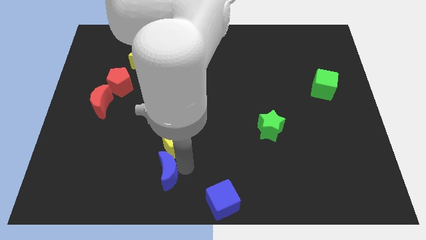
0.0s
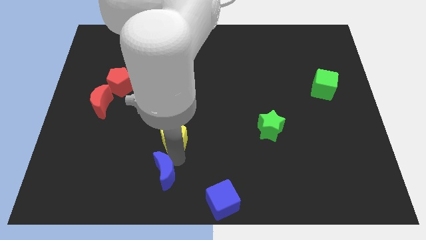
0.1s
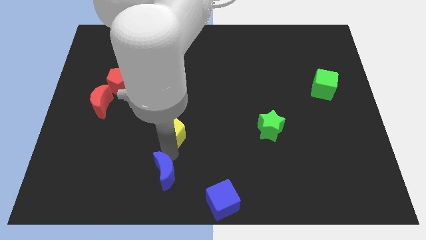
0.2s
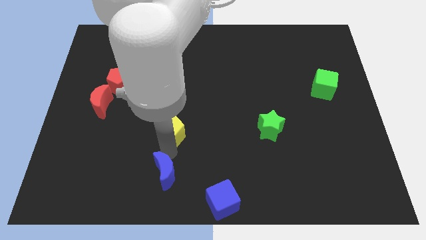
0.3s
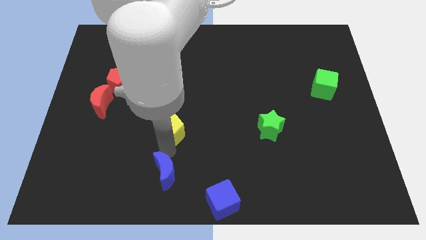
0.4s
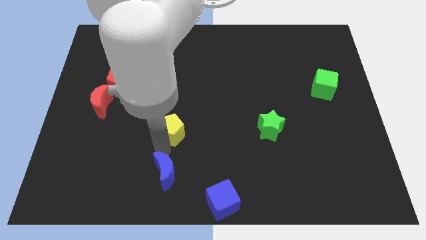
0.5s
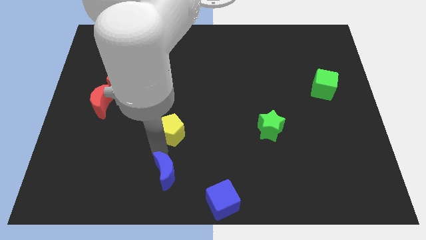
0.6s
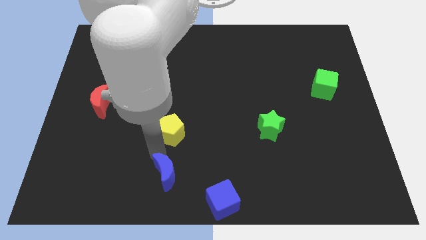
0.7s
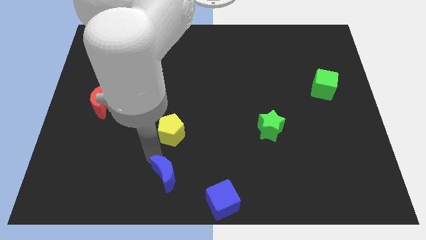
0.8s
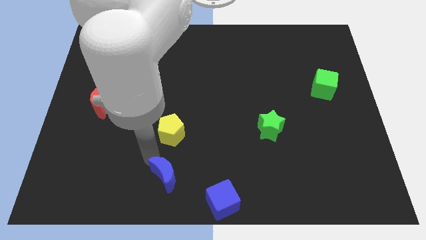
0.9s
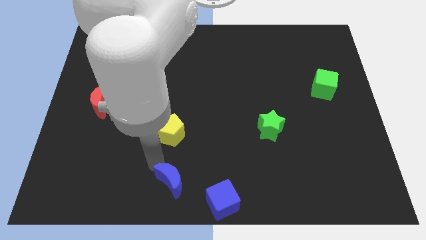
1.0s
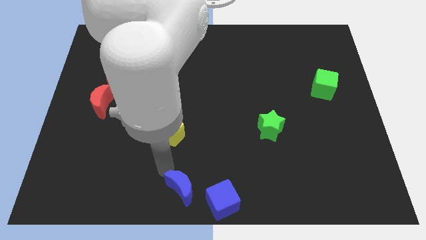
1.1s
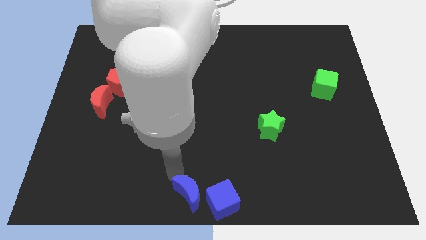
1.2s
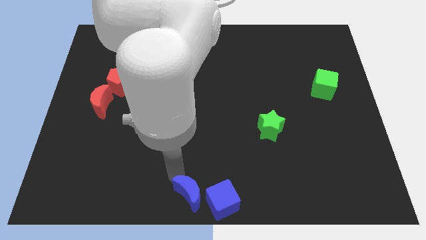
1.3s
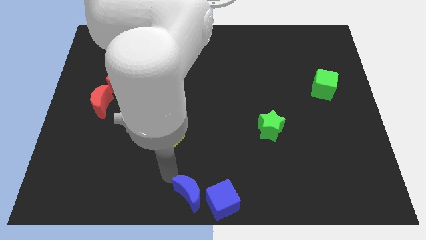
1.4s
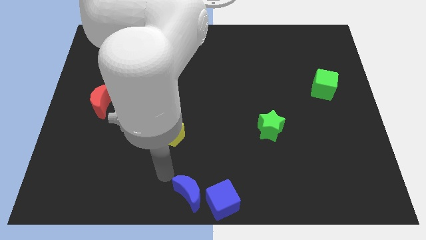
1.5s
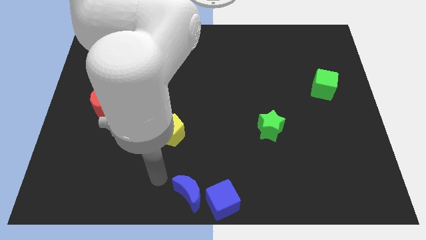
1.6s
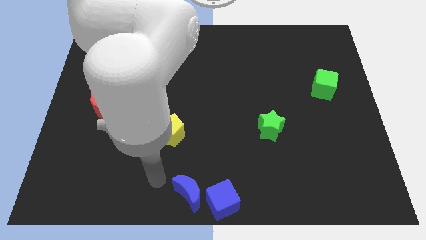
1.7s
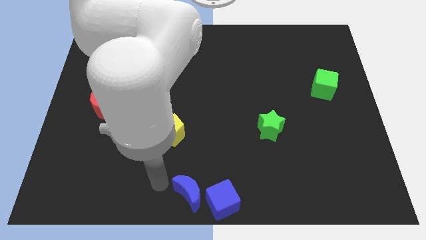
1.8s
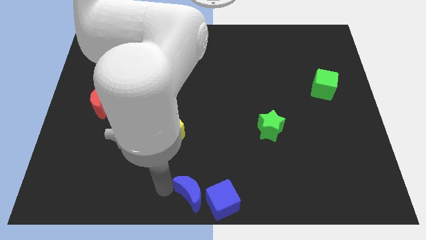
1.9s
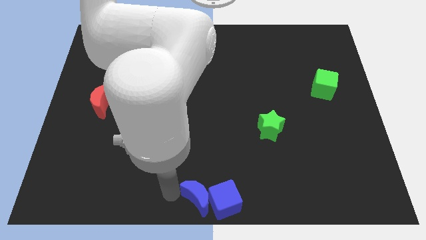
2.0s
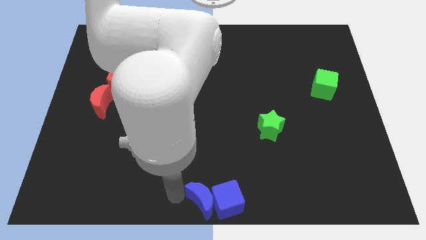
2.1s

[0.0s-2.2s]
place blue crescent close to blue cube

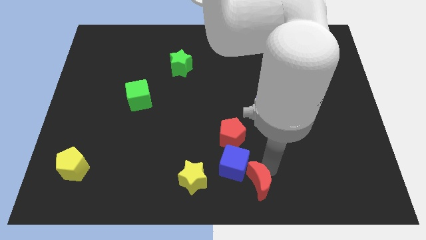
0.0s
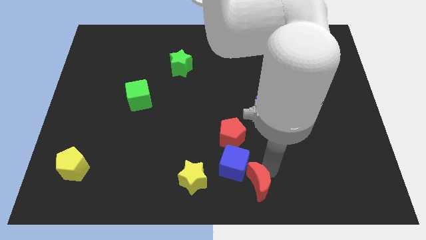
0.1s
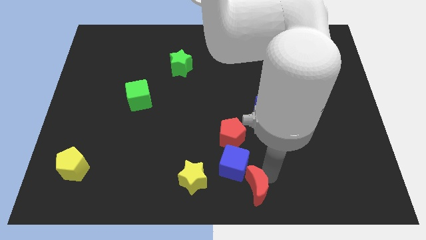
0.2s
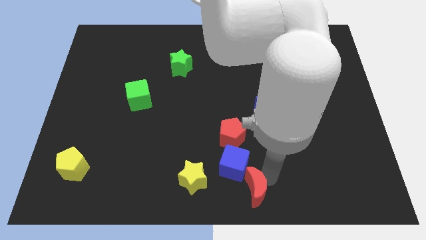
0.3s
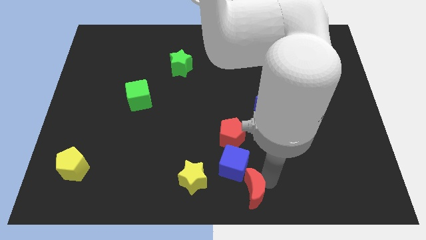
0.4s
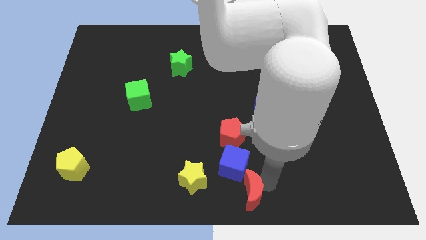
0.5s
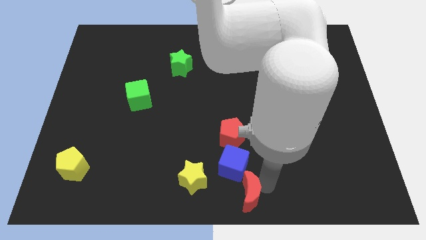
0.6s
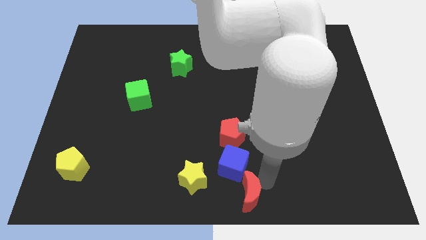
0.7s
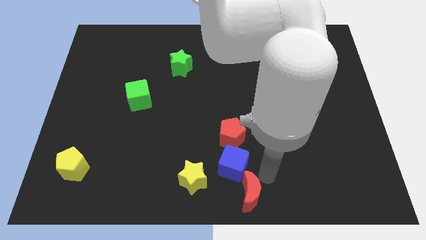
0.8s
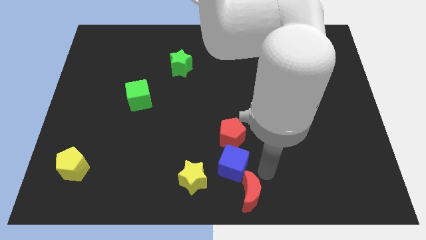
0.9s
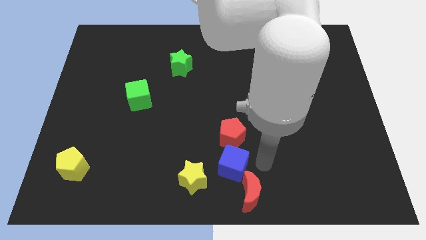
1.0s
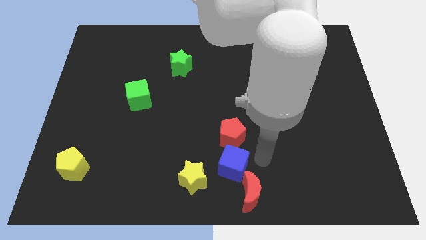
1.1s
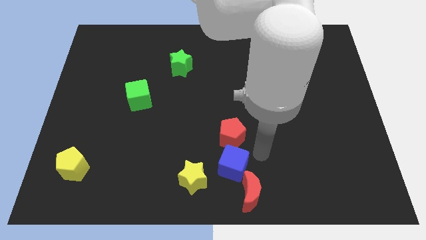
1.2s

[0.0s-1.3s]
move red moon to the bottom center

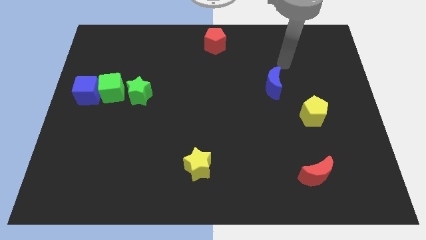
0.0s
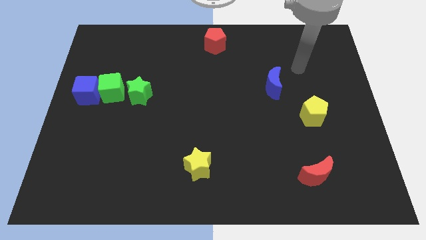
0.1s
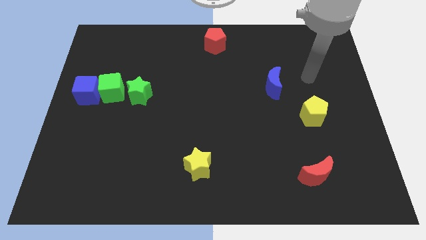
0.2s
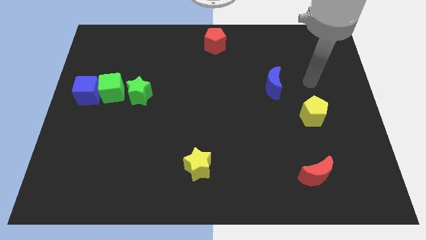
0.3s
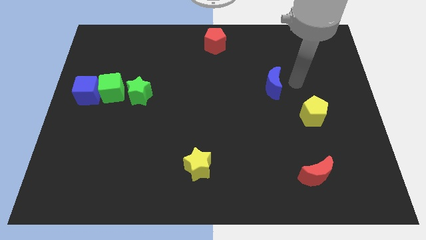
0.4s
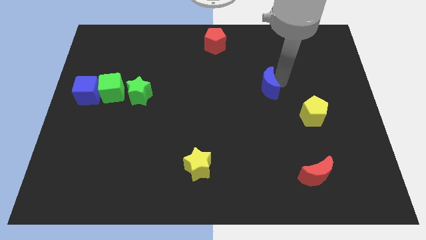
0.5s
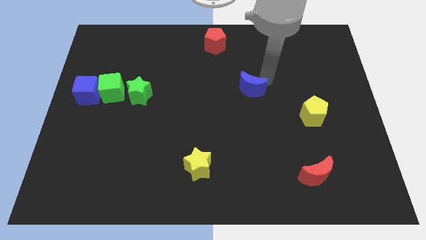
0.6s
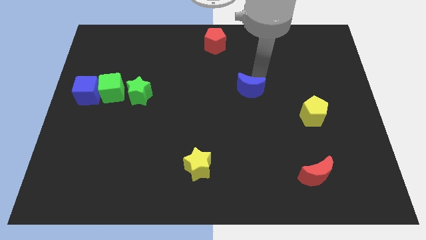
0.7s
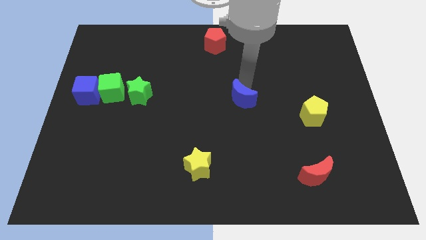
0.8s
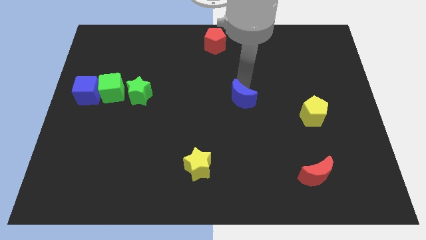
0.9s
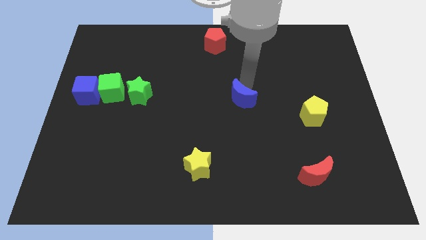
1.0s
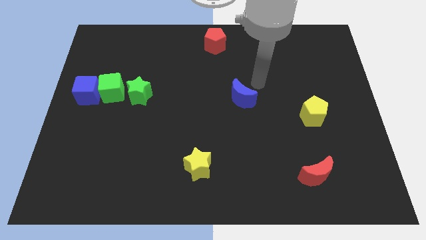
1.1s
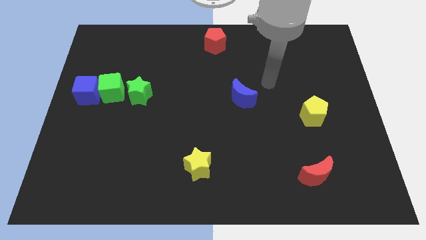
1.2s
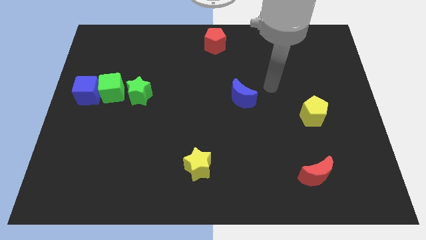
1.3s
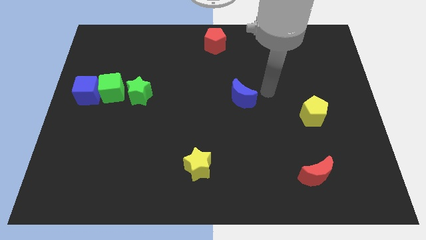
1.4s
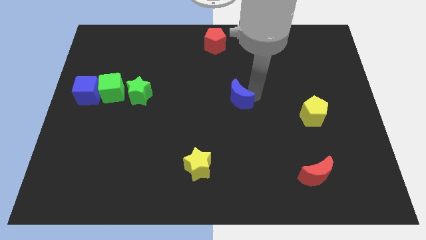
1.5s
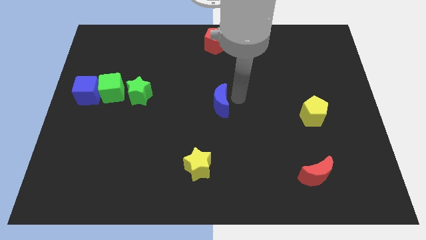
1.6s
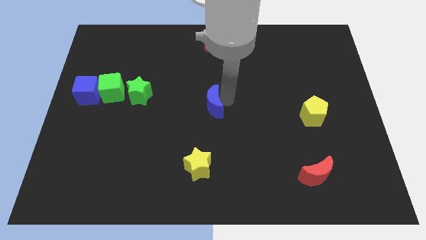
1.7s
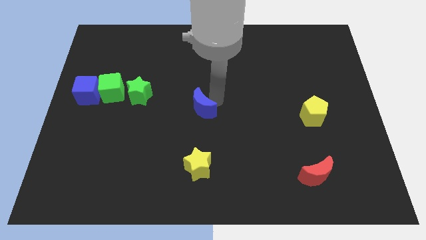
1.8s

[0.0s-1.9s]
place the blue crescent to the center of the board

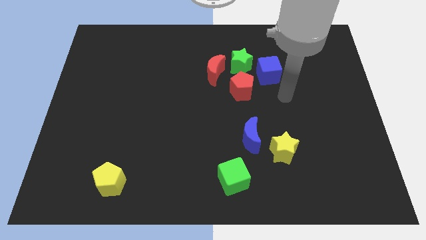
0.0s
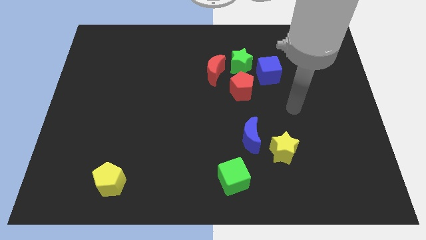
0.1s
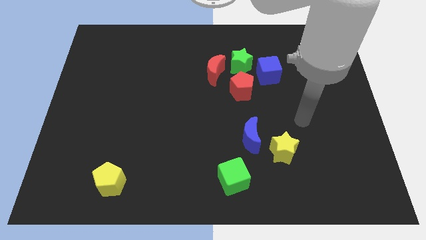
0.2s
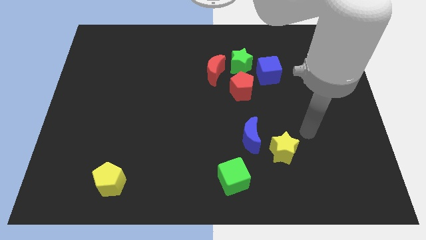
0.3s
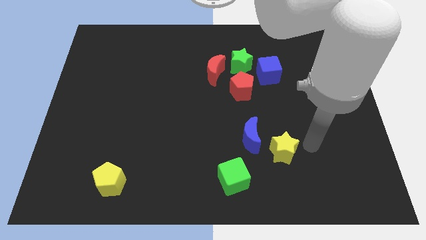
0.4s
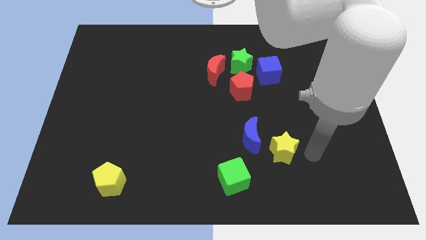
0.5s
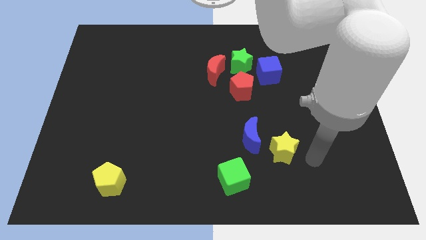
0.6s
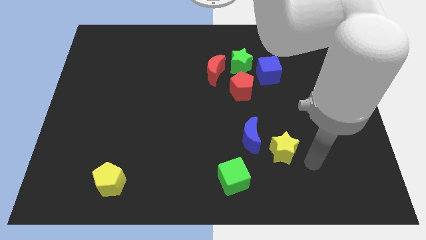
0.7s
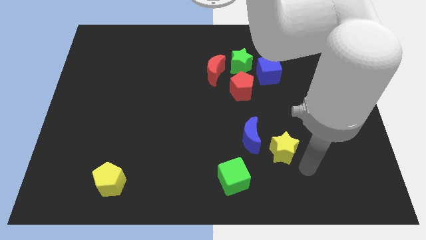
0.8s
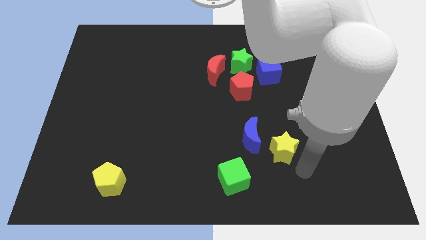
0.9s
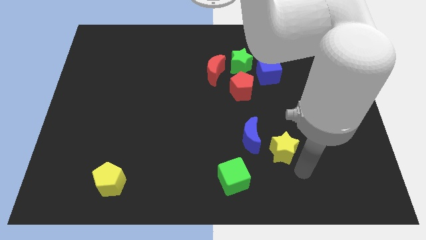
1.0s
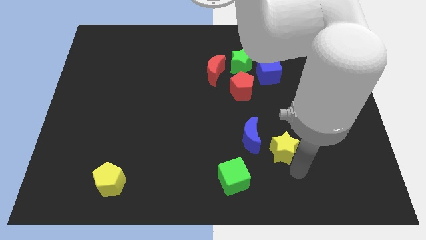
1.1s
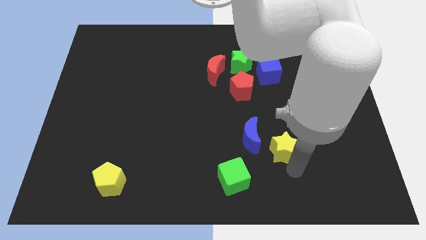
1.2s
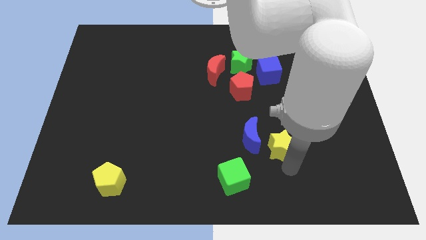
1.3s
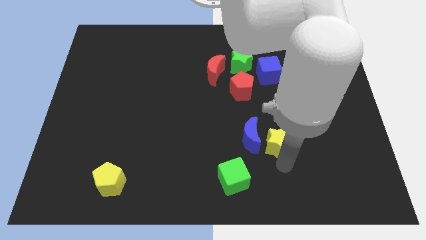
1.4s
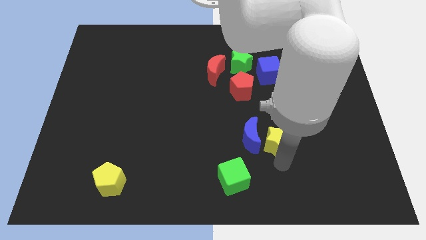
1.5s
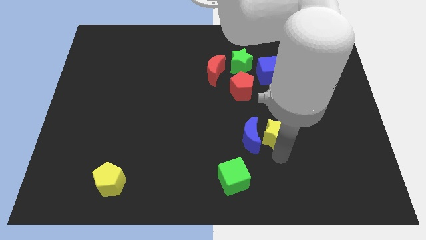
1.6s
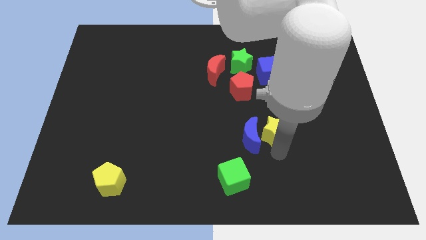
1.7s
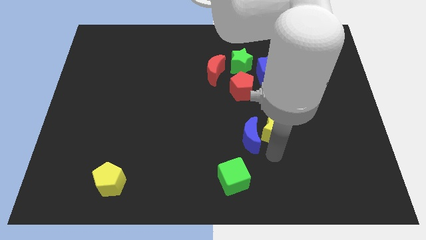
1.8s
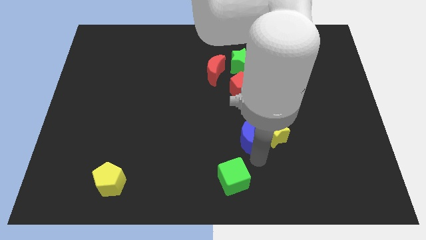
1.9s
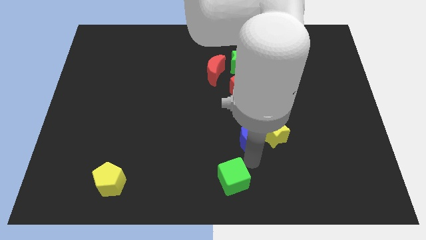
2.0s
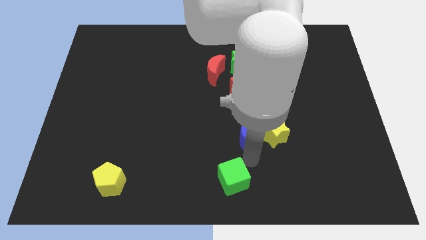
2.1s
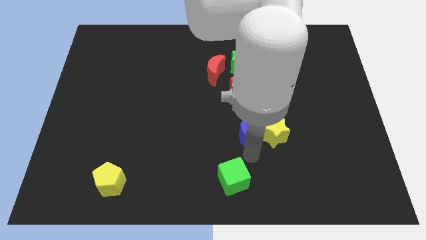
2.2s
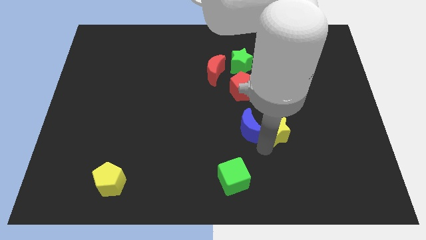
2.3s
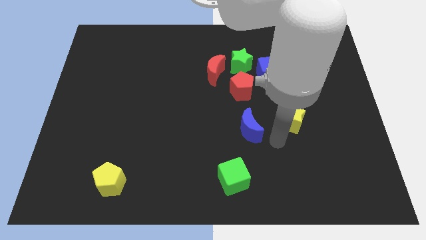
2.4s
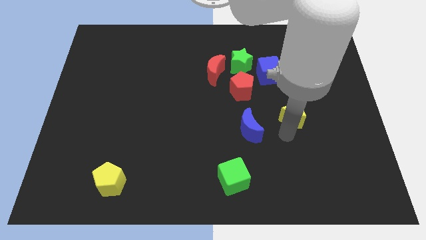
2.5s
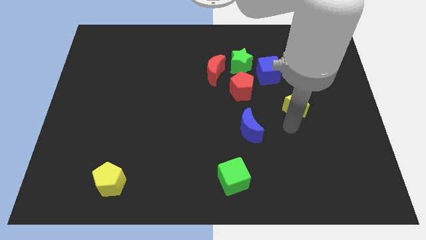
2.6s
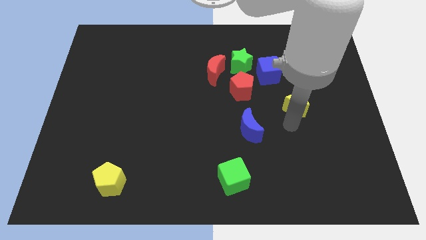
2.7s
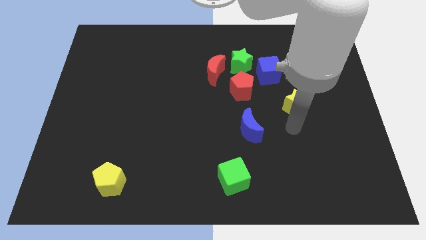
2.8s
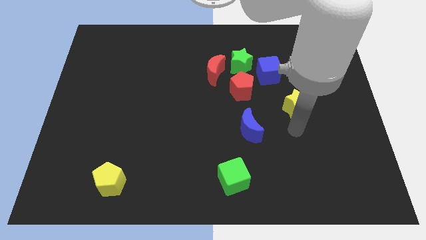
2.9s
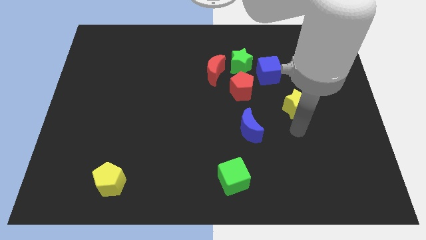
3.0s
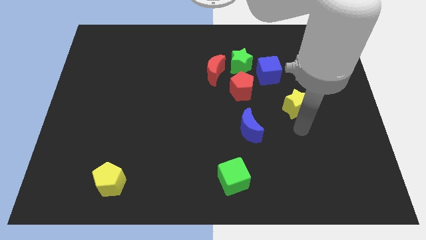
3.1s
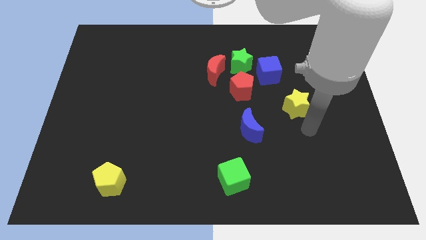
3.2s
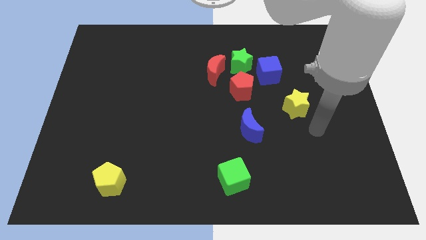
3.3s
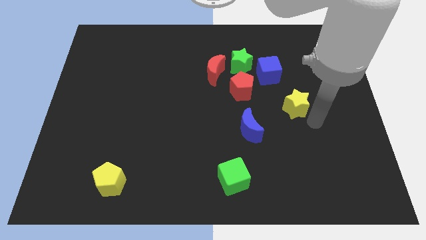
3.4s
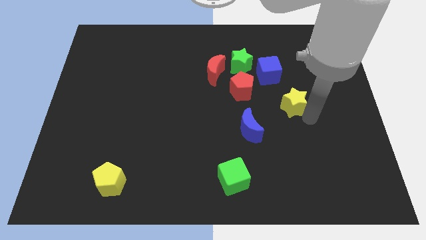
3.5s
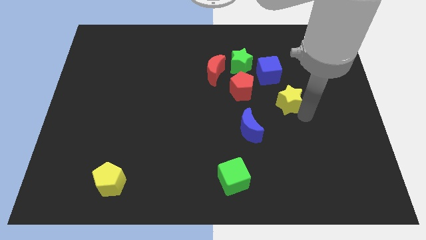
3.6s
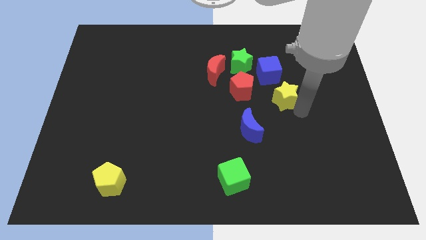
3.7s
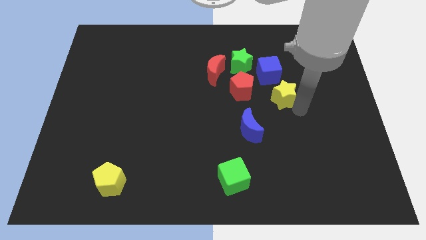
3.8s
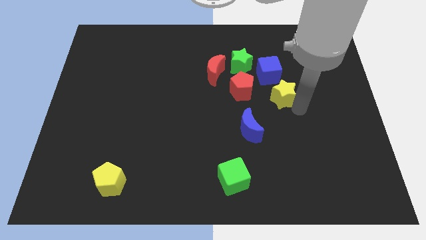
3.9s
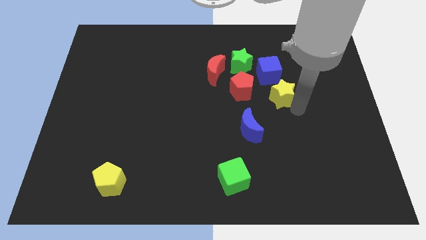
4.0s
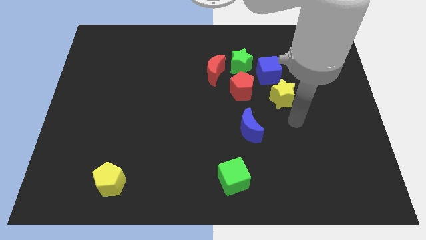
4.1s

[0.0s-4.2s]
place the yellow star below the blue cube
